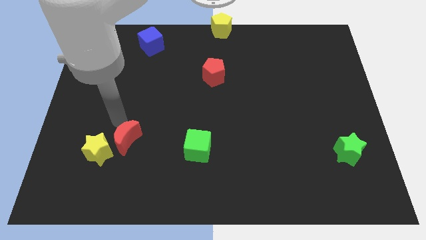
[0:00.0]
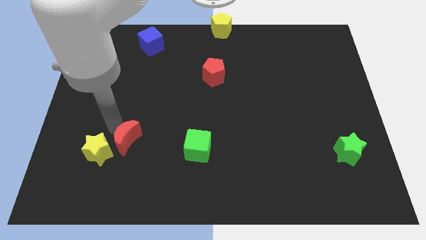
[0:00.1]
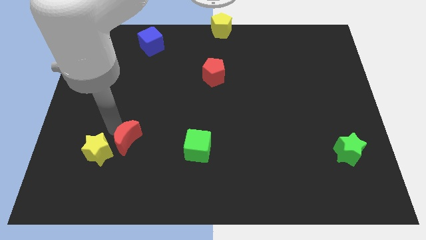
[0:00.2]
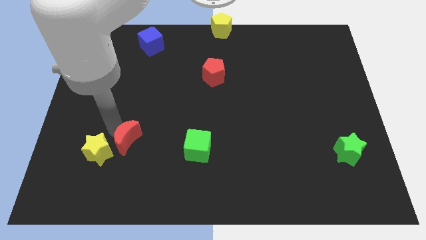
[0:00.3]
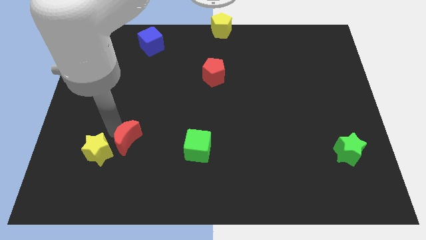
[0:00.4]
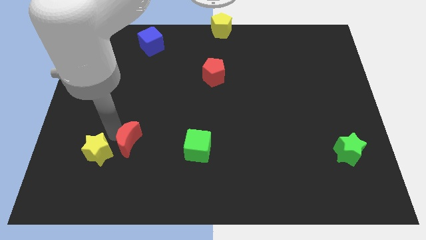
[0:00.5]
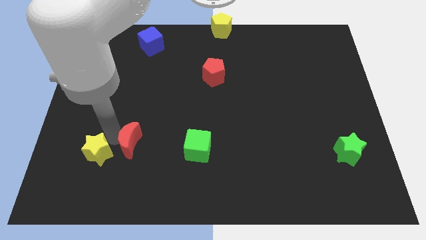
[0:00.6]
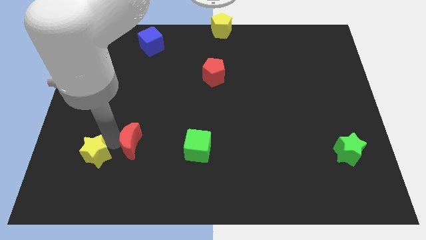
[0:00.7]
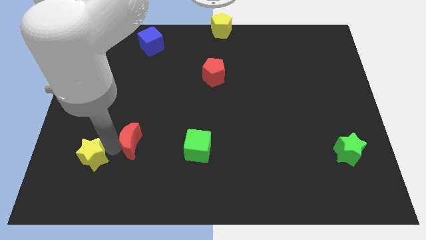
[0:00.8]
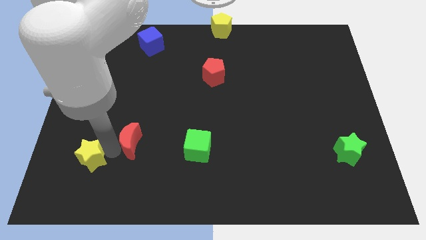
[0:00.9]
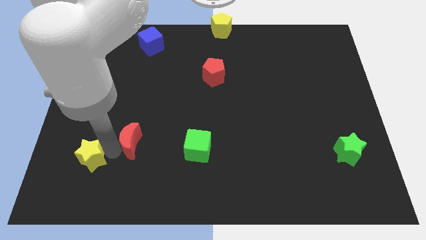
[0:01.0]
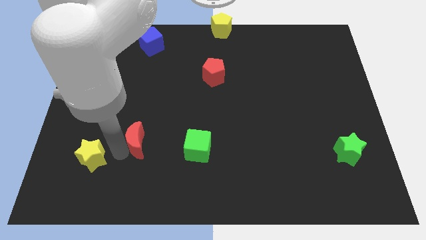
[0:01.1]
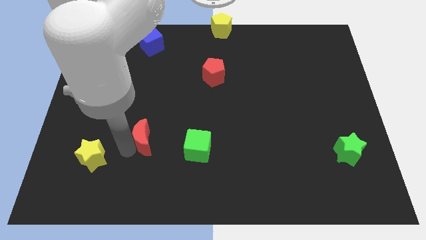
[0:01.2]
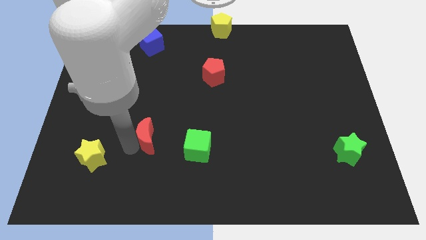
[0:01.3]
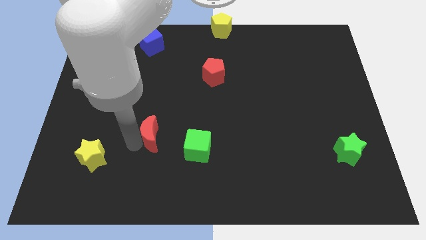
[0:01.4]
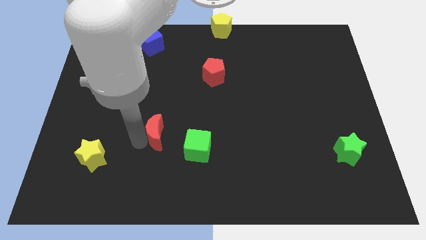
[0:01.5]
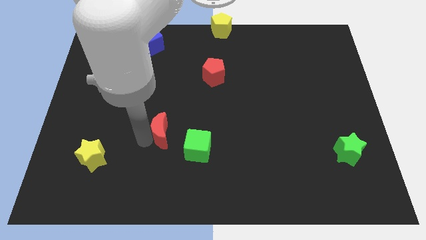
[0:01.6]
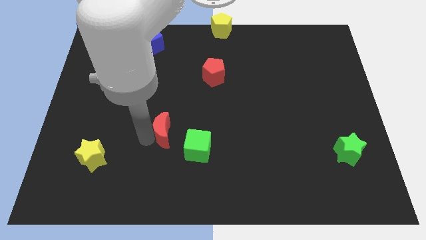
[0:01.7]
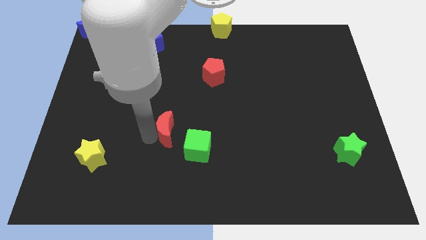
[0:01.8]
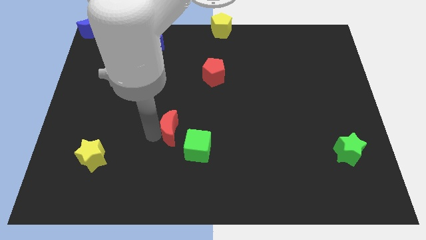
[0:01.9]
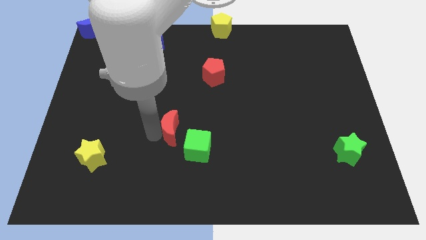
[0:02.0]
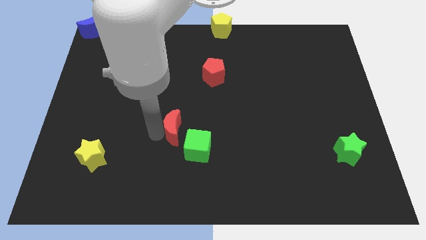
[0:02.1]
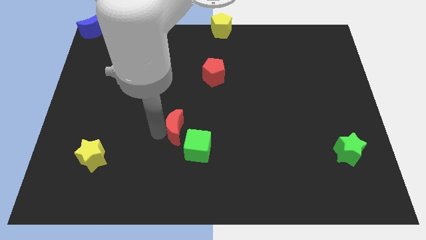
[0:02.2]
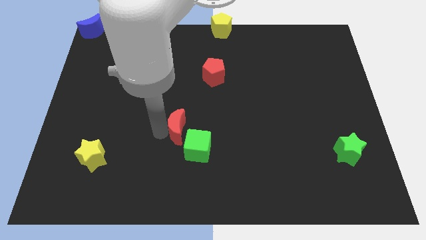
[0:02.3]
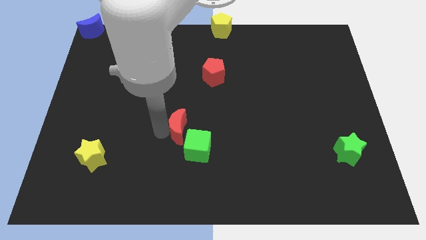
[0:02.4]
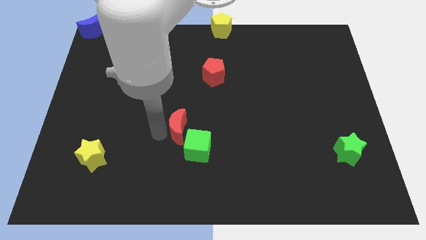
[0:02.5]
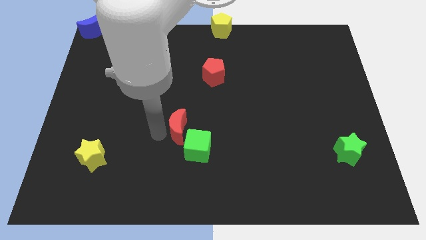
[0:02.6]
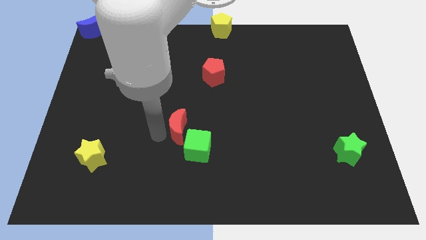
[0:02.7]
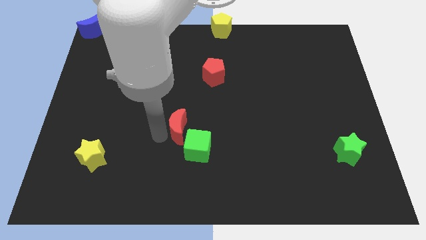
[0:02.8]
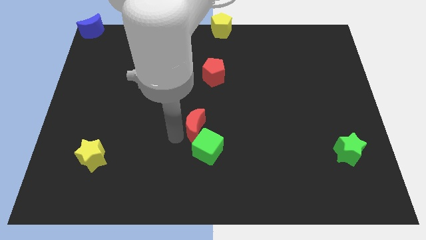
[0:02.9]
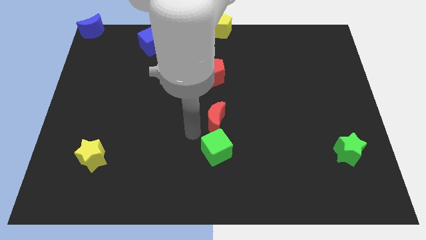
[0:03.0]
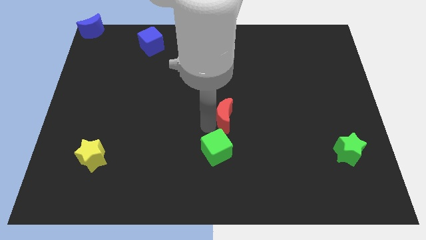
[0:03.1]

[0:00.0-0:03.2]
push red crescent above green cube

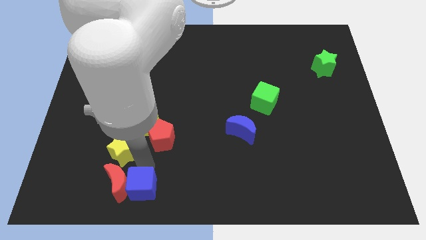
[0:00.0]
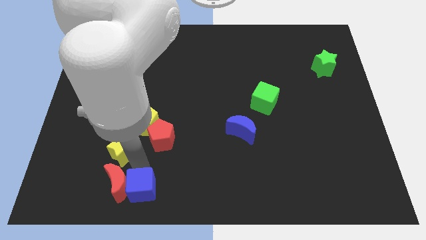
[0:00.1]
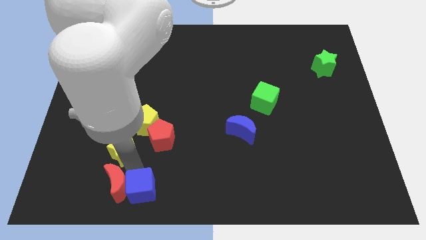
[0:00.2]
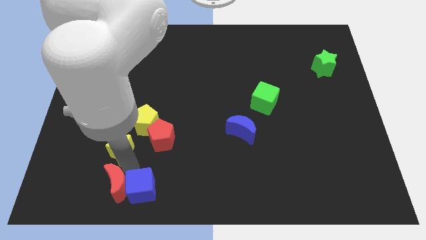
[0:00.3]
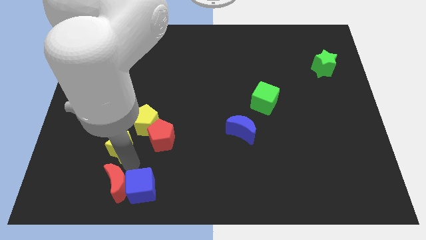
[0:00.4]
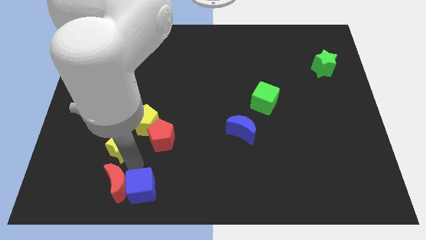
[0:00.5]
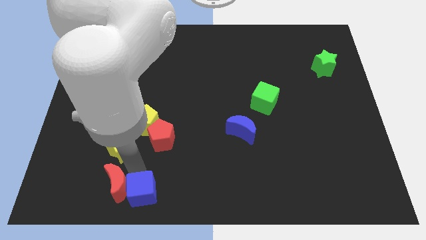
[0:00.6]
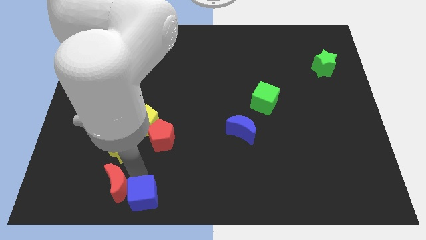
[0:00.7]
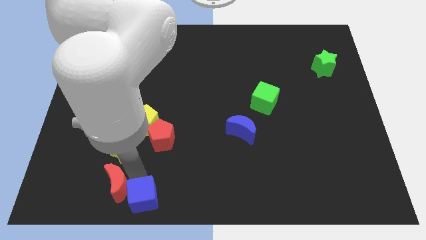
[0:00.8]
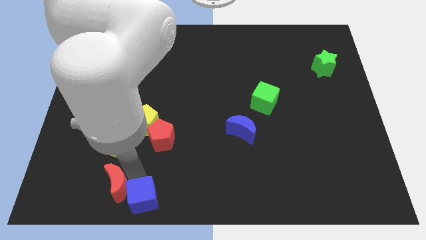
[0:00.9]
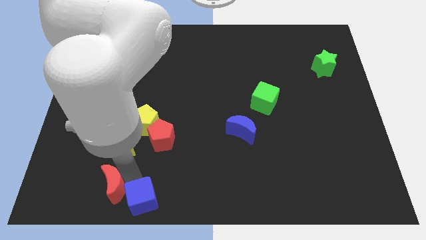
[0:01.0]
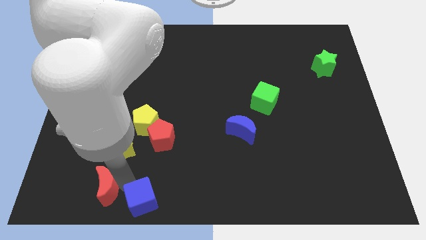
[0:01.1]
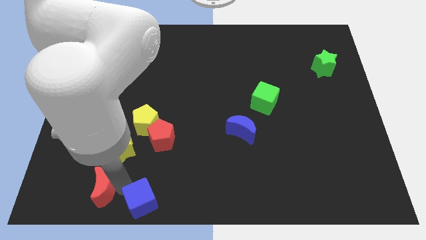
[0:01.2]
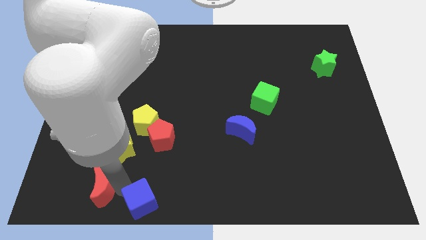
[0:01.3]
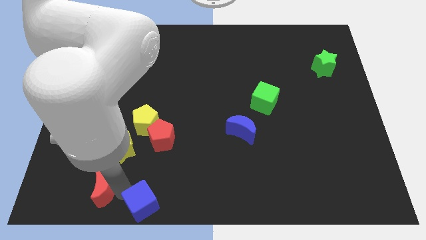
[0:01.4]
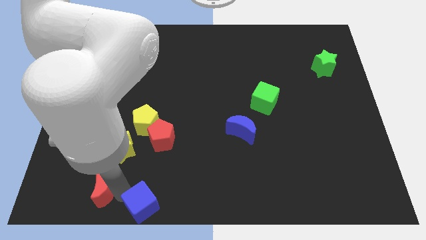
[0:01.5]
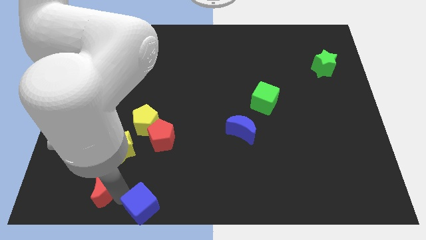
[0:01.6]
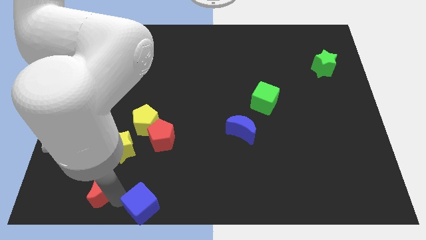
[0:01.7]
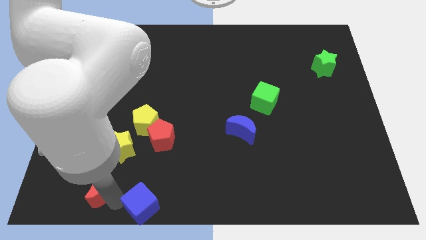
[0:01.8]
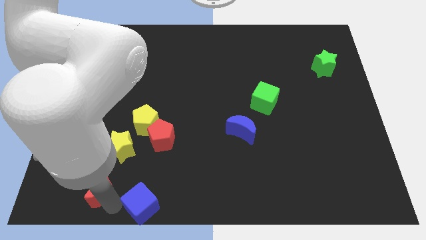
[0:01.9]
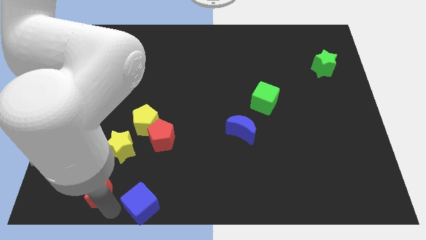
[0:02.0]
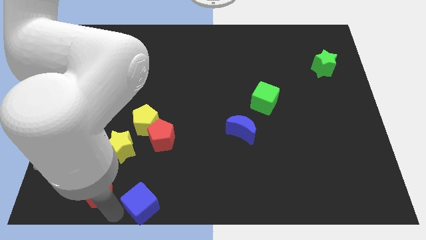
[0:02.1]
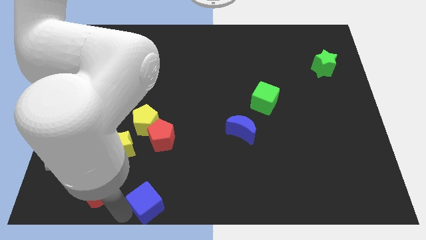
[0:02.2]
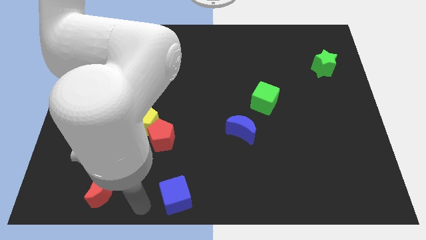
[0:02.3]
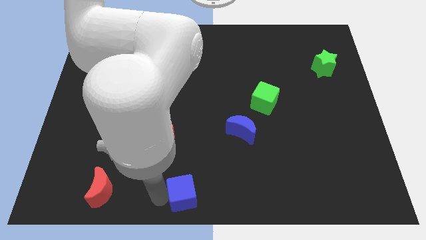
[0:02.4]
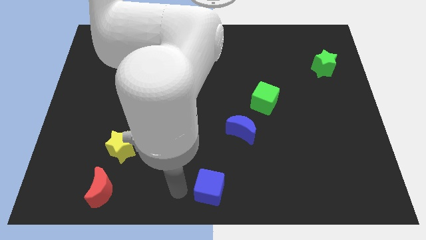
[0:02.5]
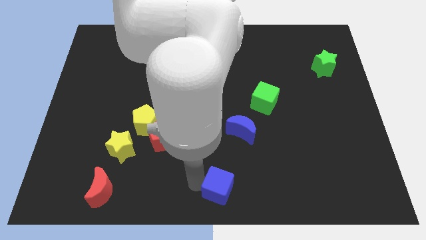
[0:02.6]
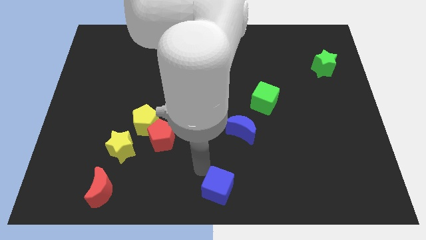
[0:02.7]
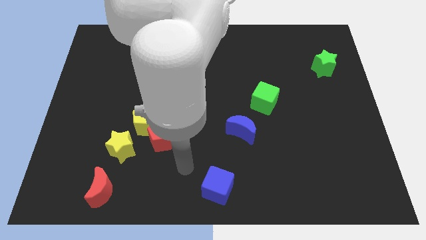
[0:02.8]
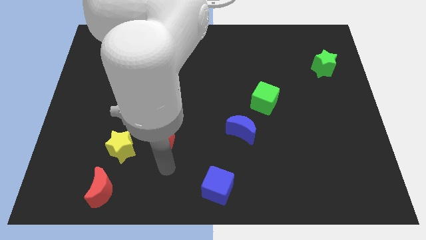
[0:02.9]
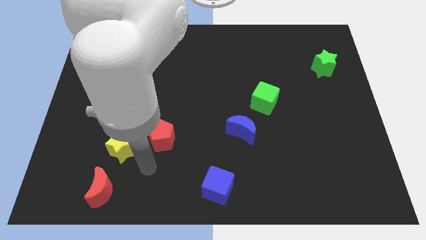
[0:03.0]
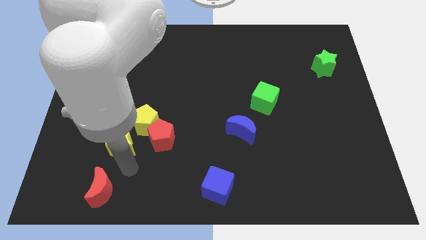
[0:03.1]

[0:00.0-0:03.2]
move the blue cube away from the red moon

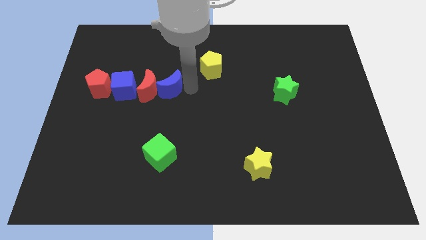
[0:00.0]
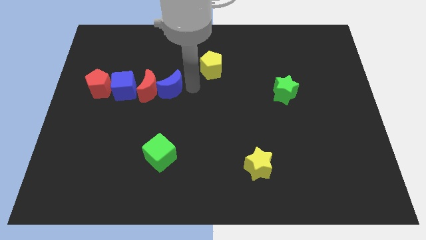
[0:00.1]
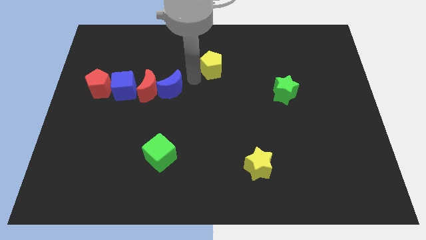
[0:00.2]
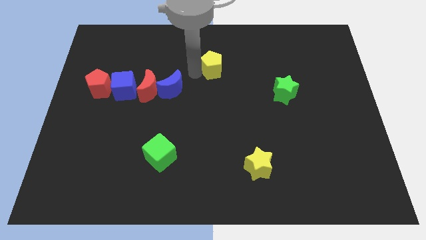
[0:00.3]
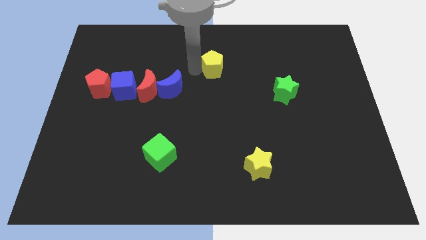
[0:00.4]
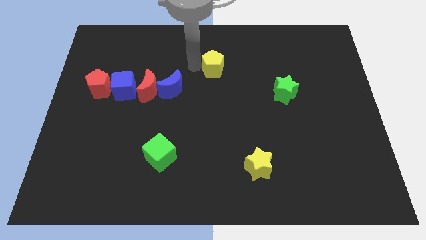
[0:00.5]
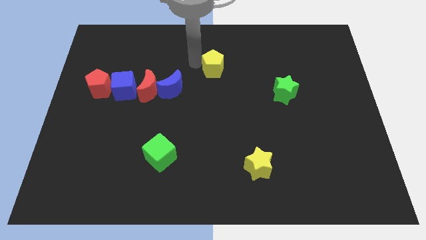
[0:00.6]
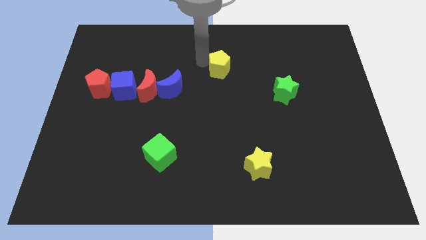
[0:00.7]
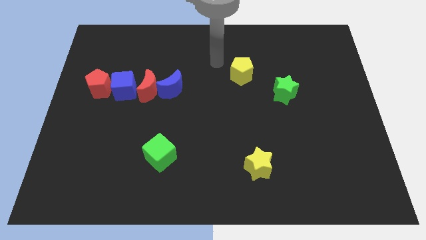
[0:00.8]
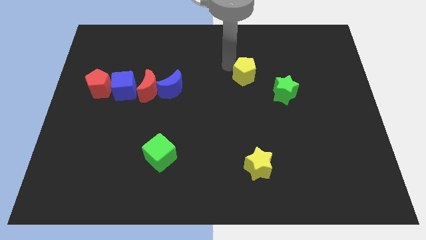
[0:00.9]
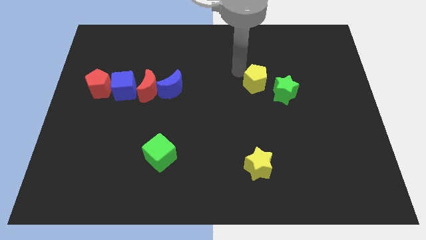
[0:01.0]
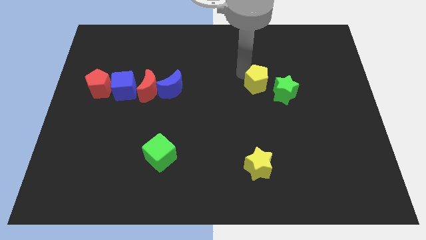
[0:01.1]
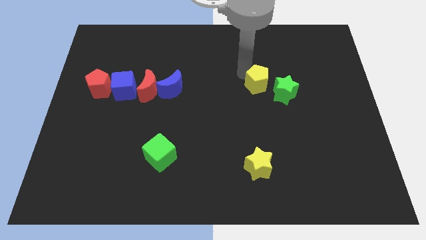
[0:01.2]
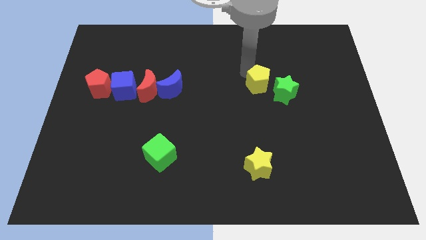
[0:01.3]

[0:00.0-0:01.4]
move the yellow pentagon to the left of the green star

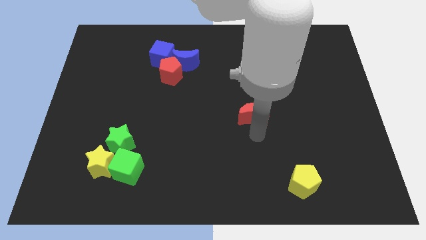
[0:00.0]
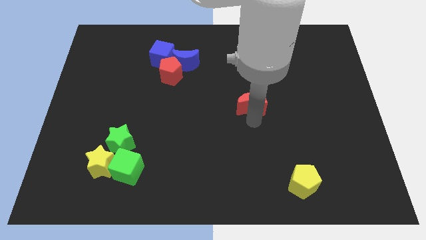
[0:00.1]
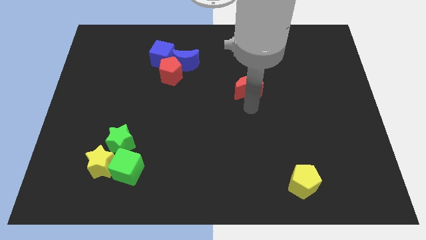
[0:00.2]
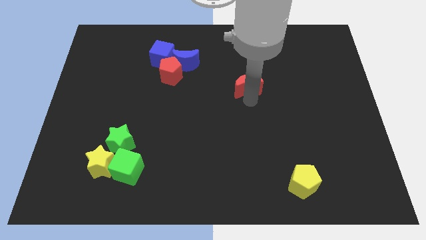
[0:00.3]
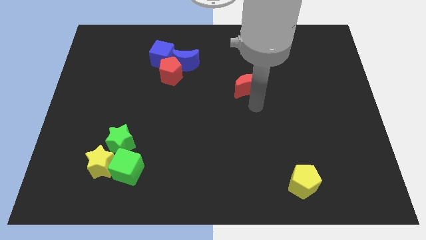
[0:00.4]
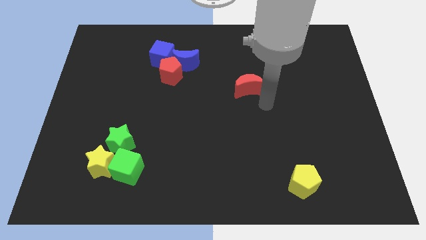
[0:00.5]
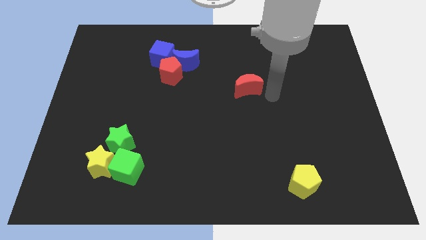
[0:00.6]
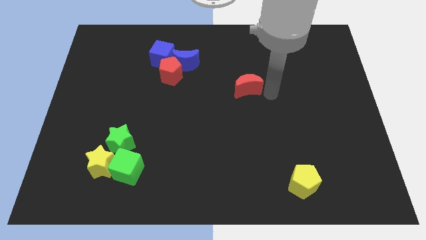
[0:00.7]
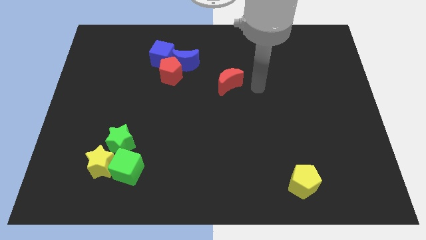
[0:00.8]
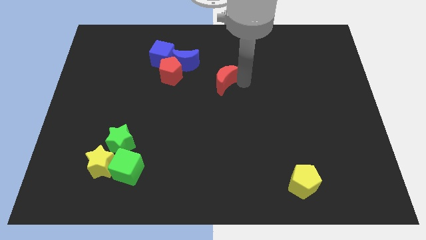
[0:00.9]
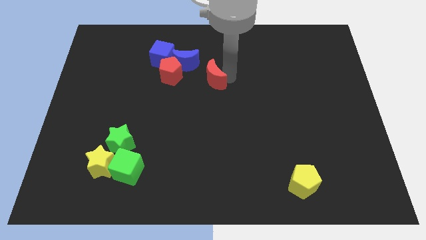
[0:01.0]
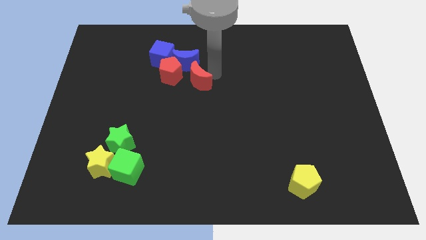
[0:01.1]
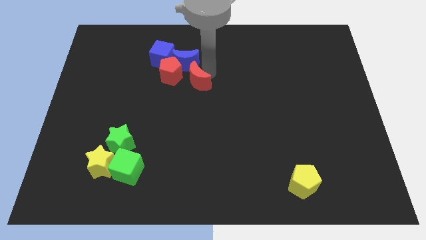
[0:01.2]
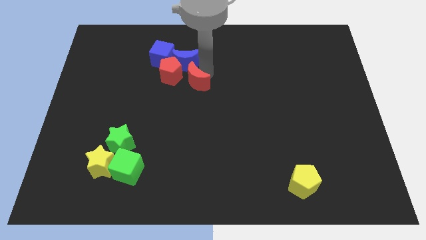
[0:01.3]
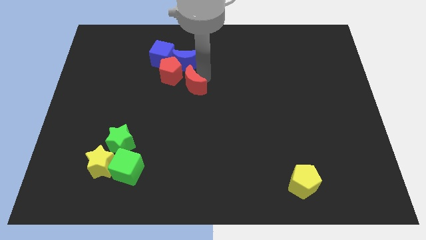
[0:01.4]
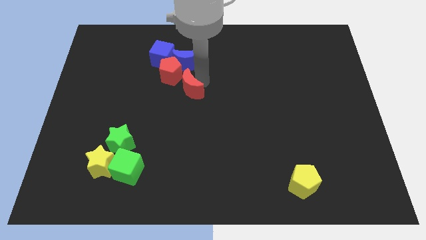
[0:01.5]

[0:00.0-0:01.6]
place the red moon vertically below the blue moon
